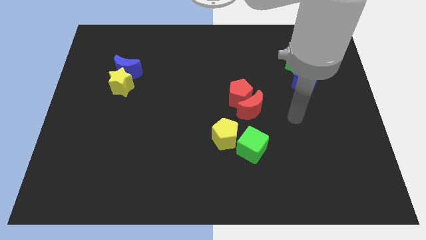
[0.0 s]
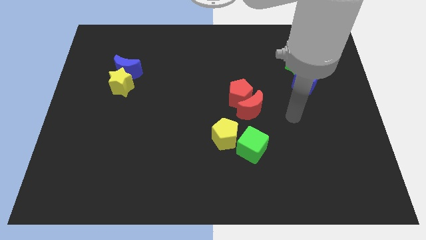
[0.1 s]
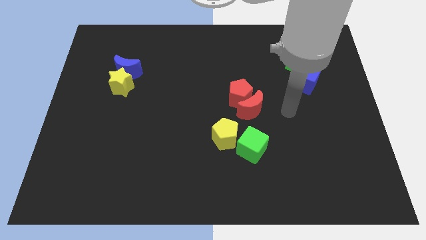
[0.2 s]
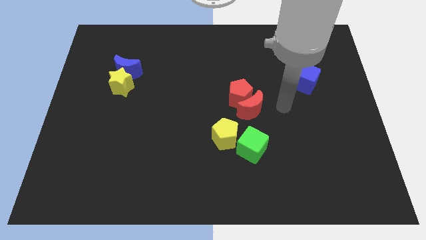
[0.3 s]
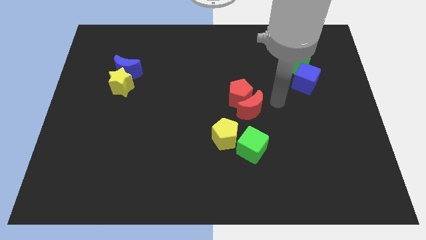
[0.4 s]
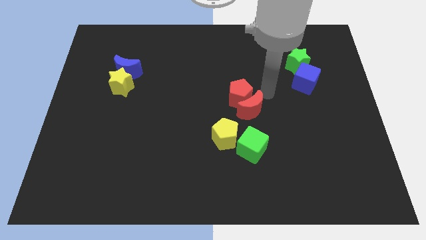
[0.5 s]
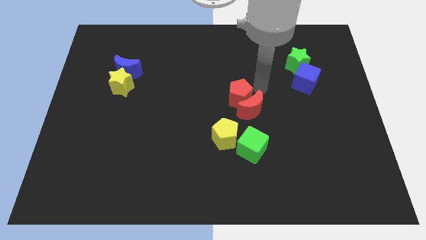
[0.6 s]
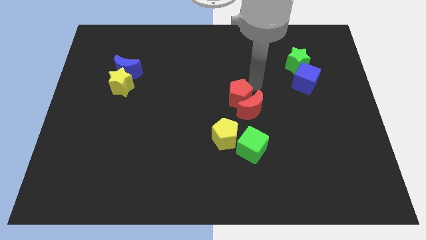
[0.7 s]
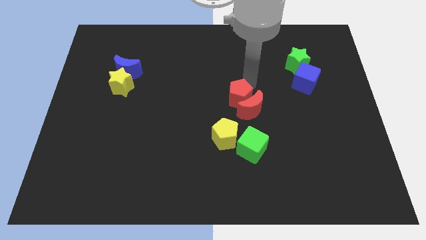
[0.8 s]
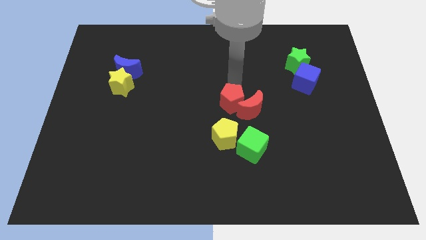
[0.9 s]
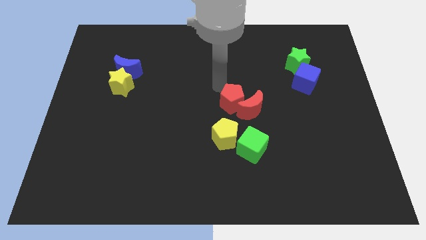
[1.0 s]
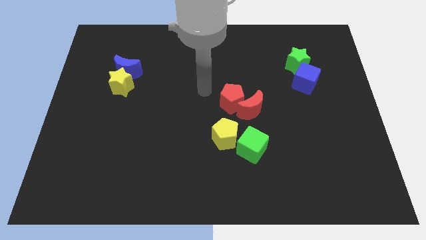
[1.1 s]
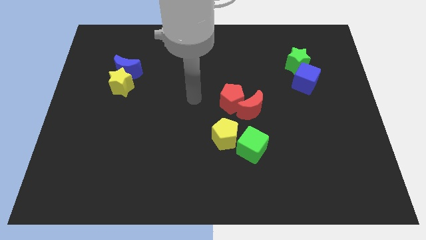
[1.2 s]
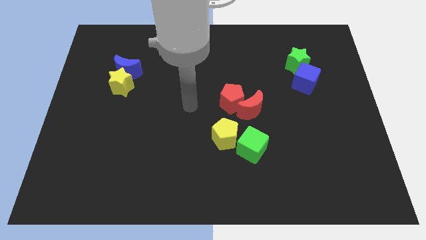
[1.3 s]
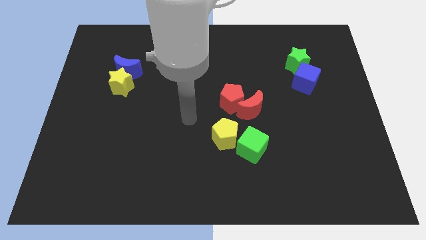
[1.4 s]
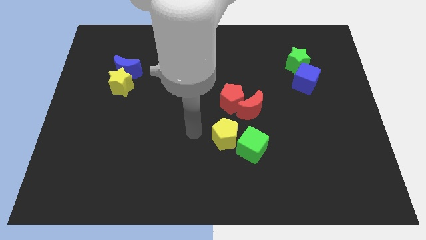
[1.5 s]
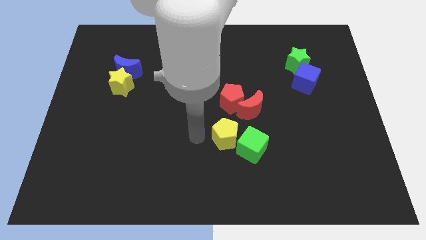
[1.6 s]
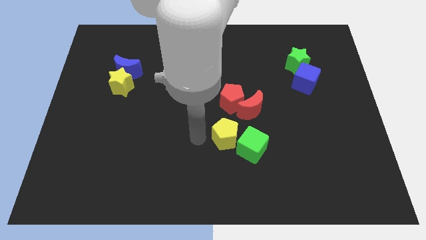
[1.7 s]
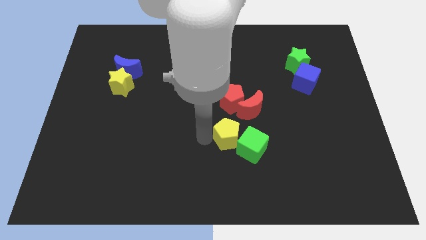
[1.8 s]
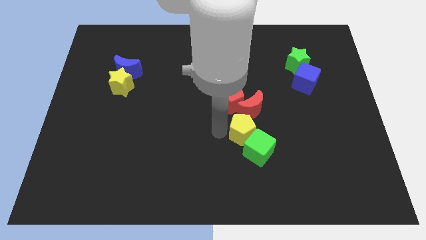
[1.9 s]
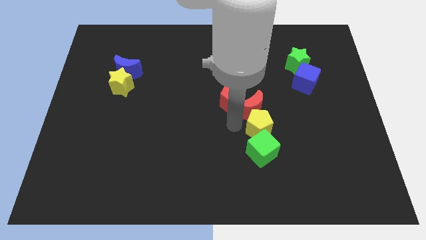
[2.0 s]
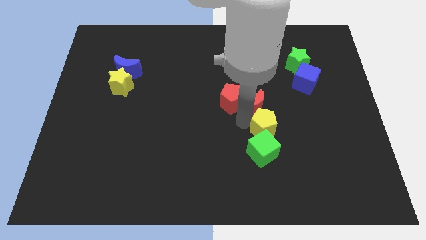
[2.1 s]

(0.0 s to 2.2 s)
move the yellow pentagon on top of the green cube

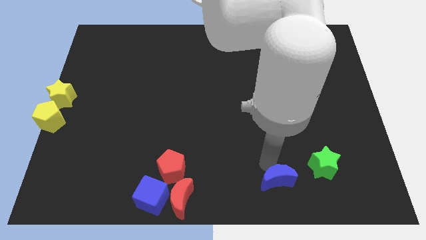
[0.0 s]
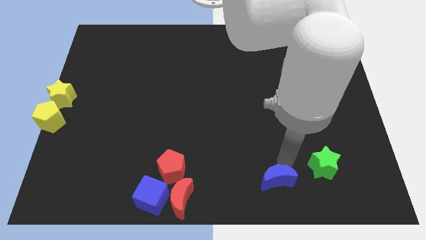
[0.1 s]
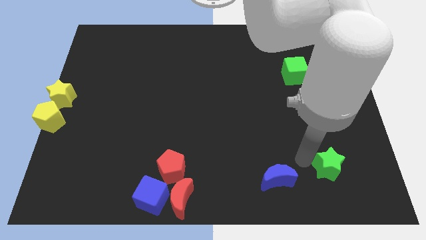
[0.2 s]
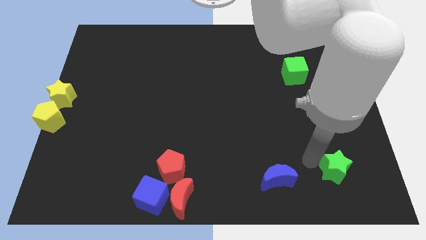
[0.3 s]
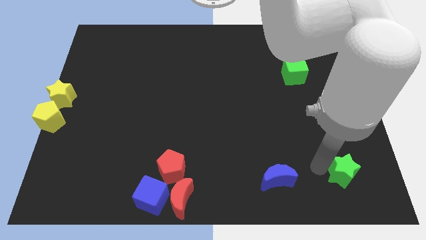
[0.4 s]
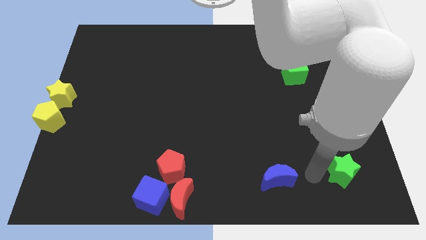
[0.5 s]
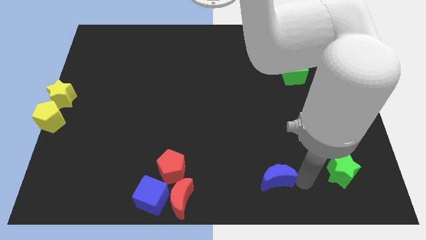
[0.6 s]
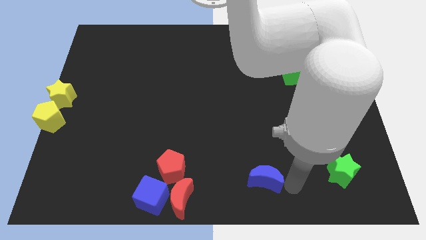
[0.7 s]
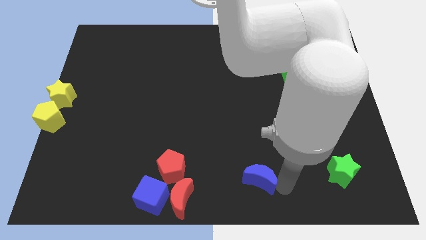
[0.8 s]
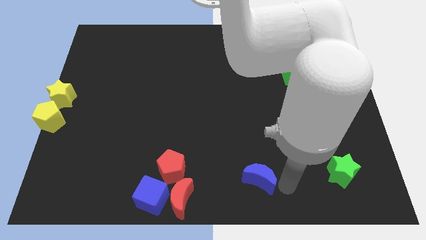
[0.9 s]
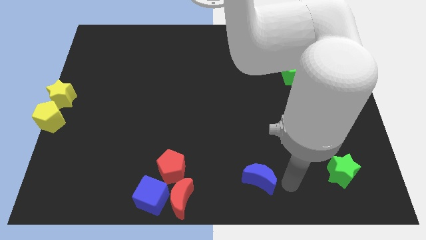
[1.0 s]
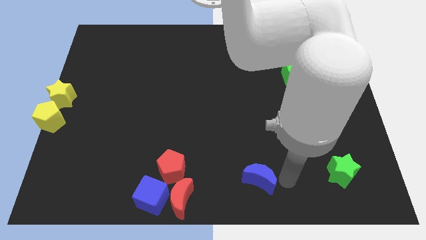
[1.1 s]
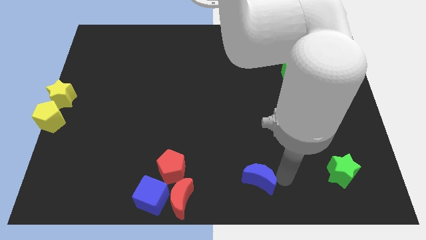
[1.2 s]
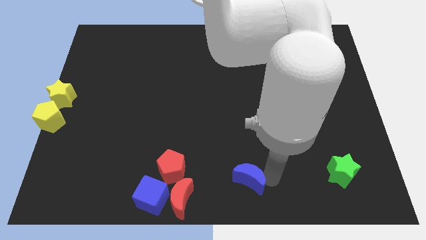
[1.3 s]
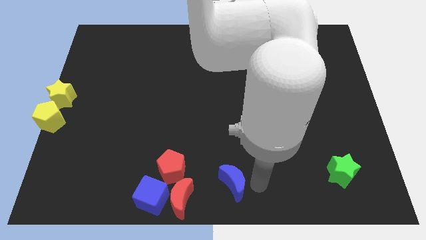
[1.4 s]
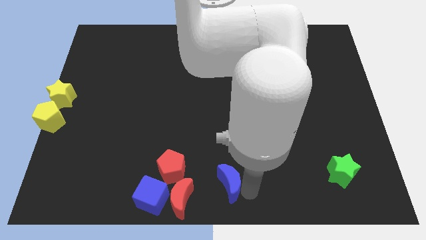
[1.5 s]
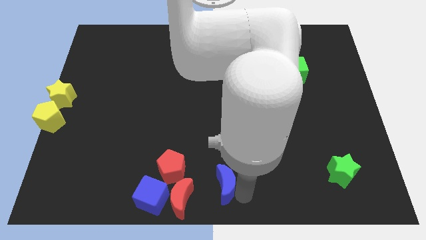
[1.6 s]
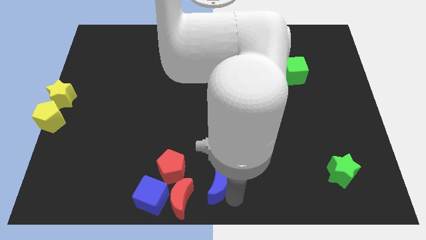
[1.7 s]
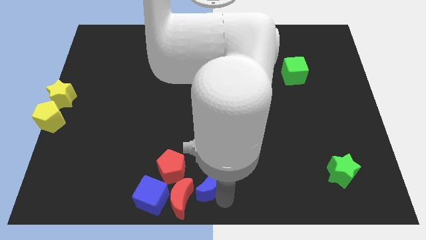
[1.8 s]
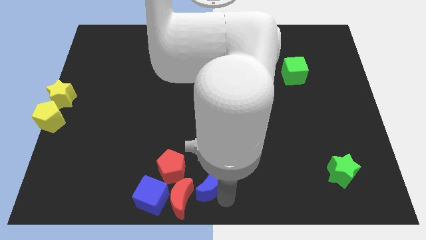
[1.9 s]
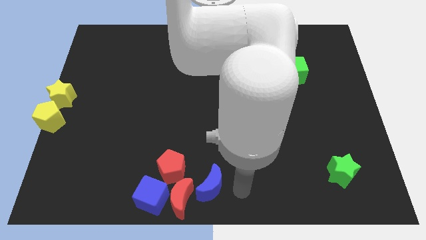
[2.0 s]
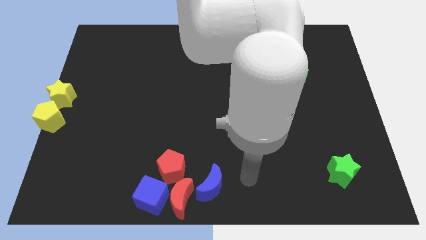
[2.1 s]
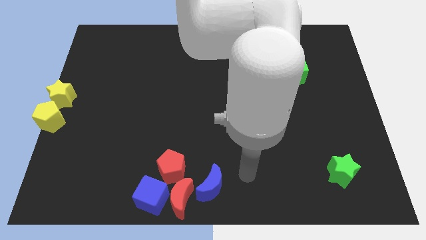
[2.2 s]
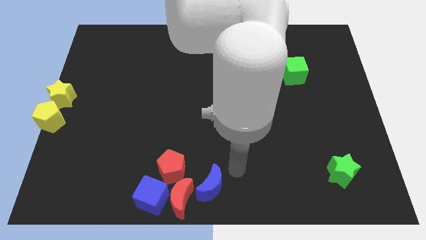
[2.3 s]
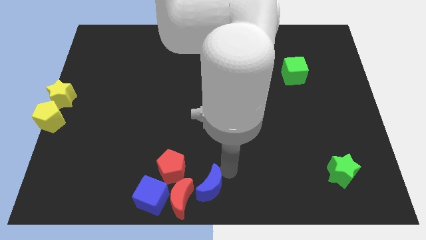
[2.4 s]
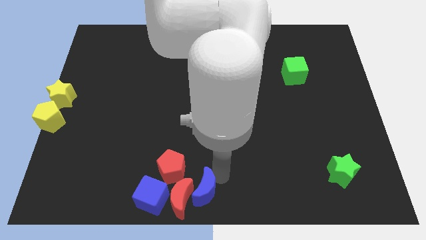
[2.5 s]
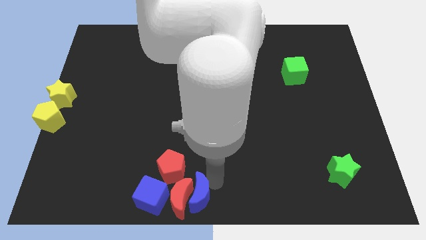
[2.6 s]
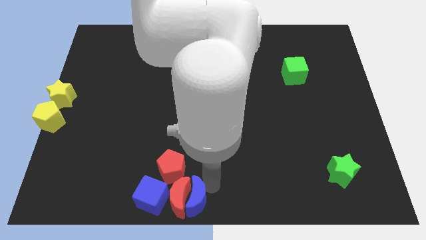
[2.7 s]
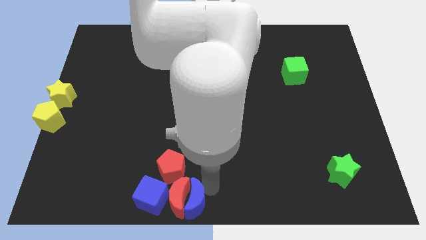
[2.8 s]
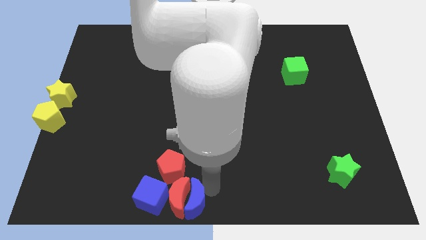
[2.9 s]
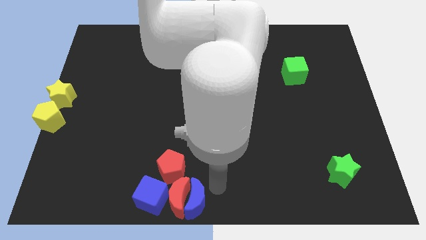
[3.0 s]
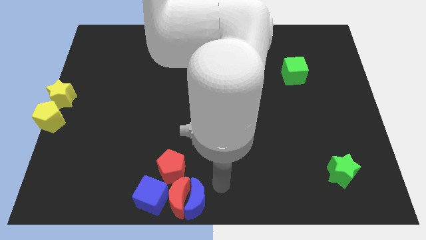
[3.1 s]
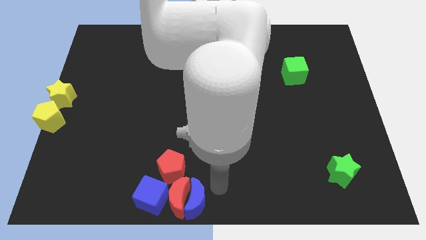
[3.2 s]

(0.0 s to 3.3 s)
push the blue moon into the red moon

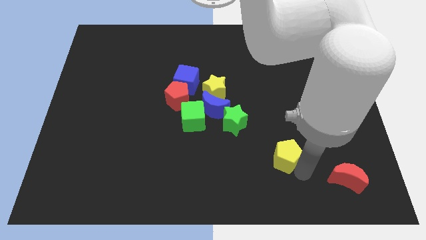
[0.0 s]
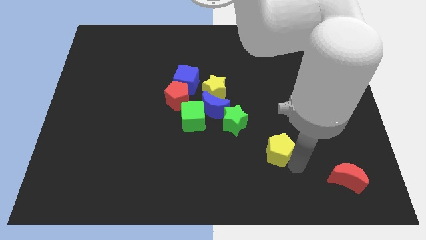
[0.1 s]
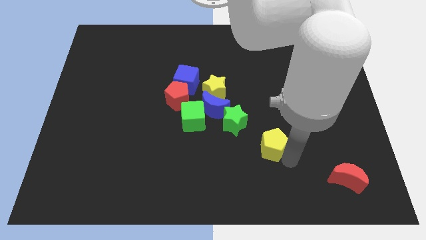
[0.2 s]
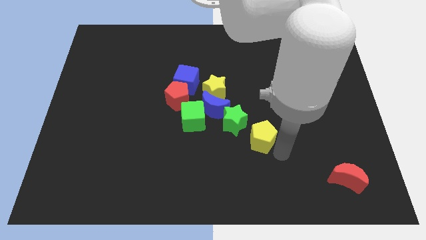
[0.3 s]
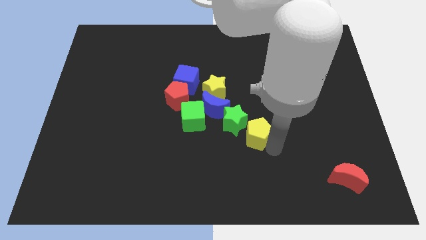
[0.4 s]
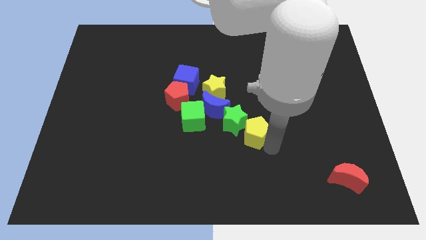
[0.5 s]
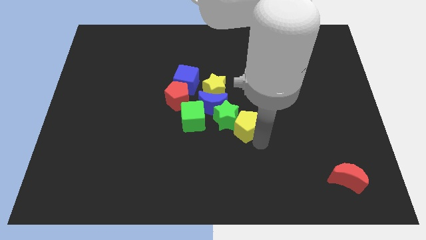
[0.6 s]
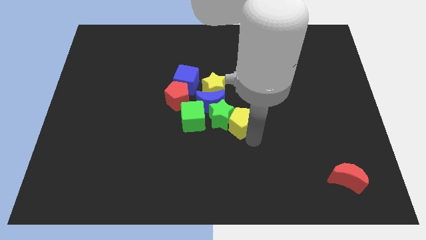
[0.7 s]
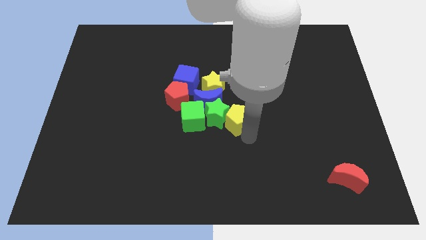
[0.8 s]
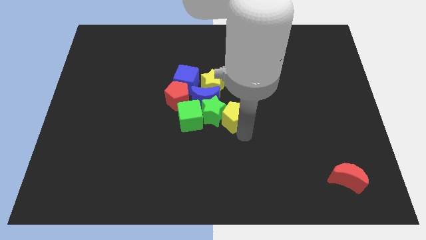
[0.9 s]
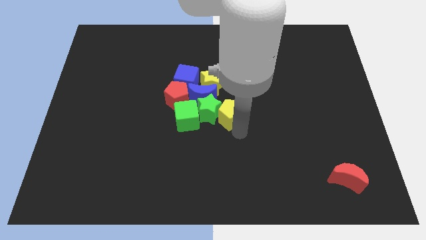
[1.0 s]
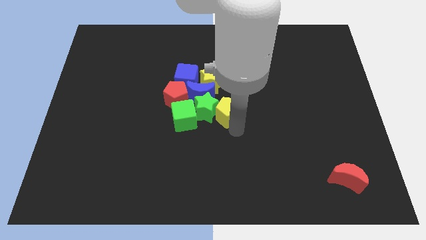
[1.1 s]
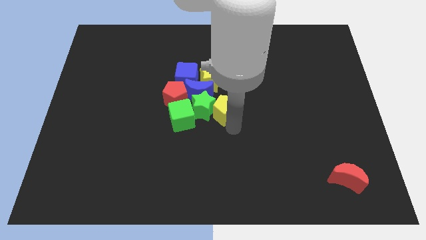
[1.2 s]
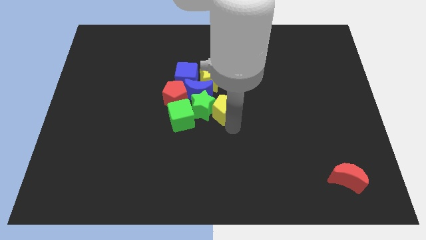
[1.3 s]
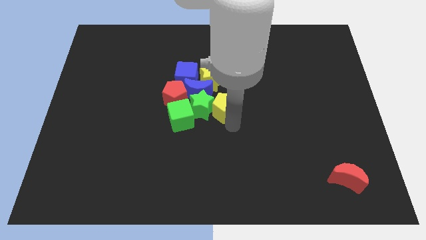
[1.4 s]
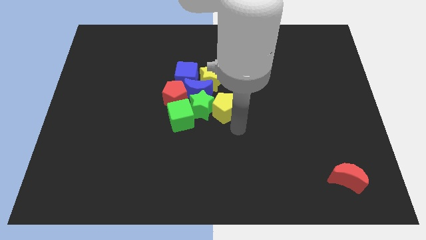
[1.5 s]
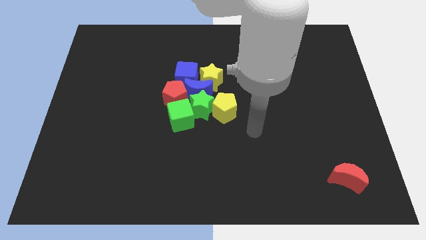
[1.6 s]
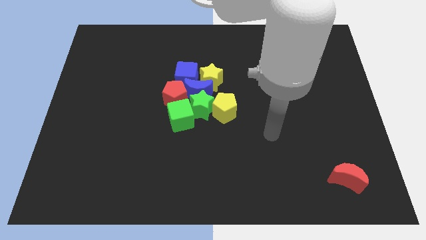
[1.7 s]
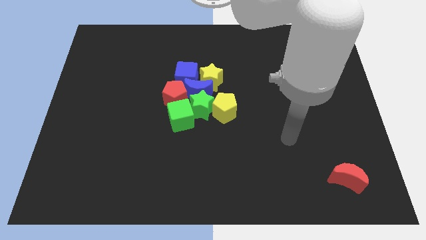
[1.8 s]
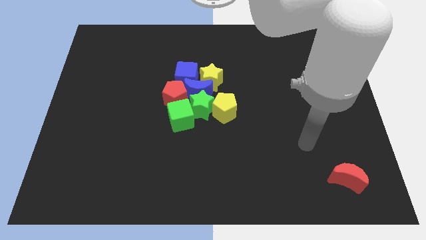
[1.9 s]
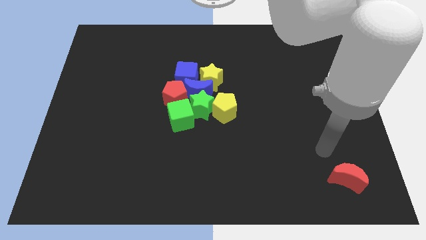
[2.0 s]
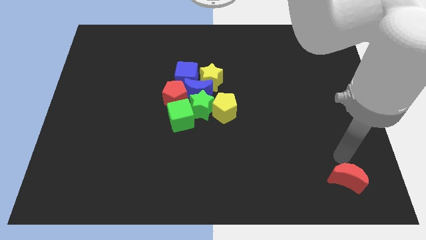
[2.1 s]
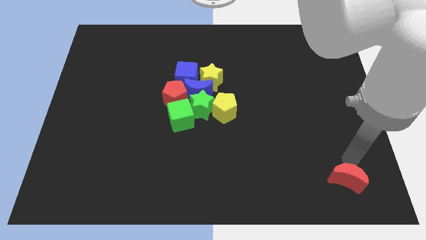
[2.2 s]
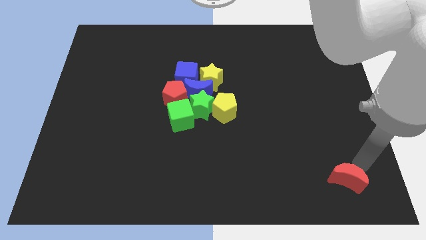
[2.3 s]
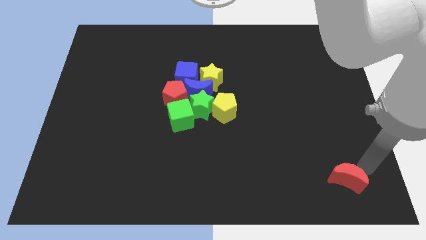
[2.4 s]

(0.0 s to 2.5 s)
push the group of blocks towards the top left corner of the board

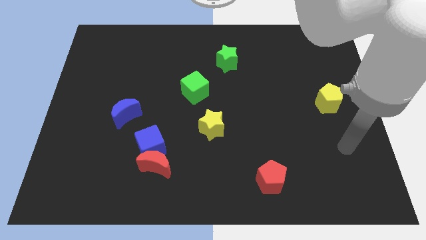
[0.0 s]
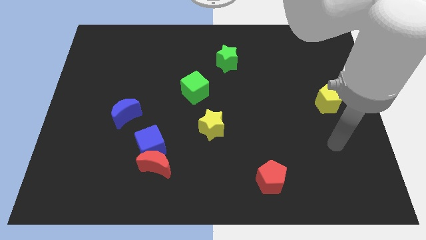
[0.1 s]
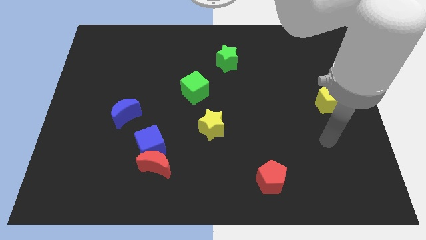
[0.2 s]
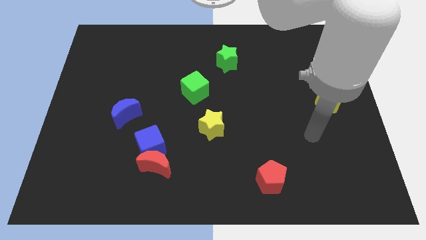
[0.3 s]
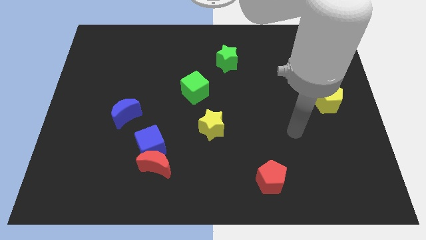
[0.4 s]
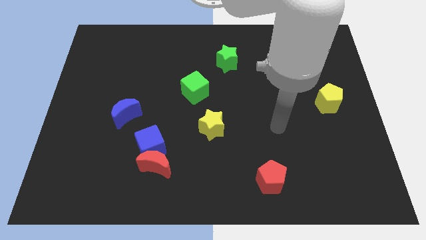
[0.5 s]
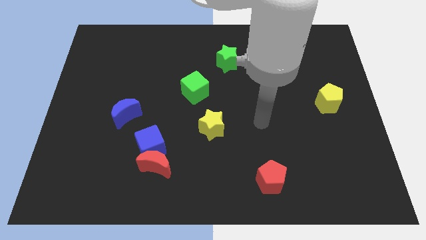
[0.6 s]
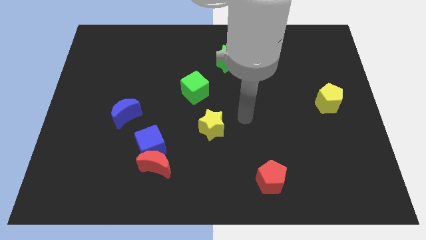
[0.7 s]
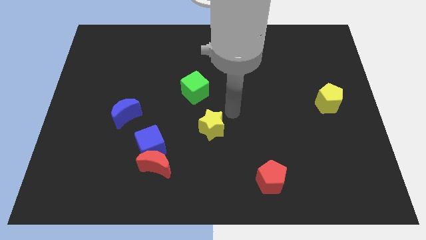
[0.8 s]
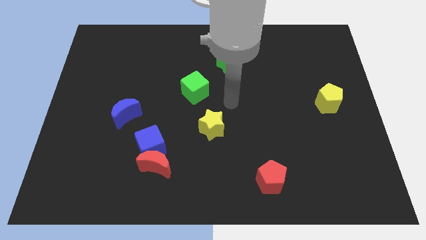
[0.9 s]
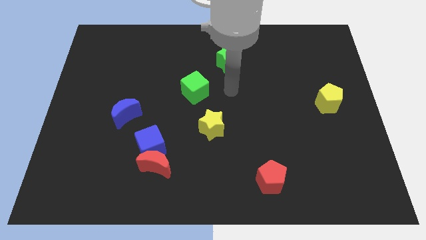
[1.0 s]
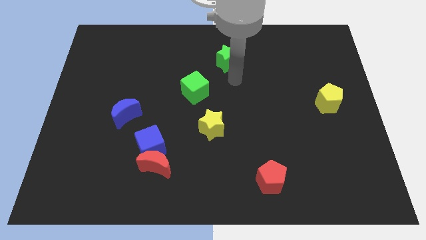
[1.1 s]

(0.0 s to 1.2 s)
place the arm below the green star
